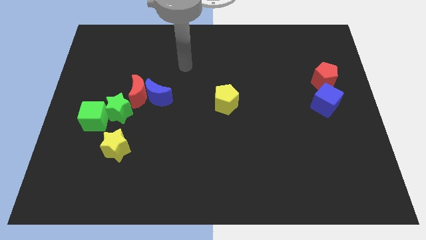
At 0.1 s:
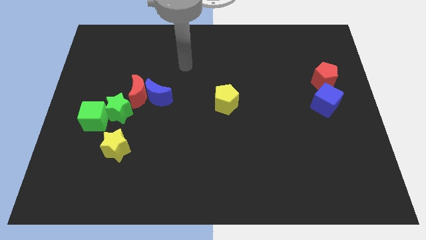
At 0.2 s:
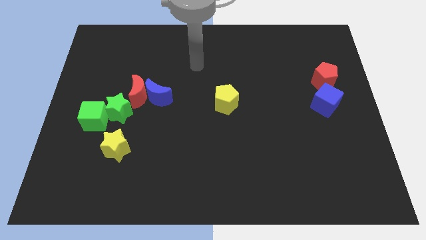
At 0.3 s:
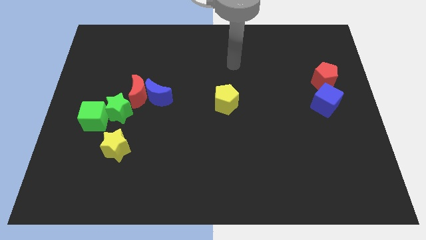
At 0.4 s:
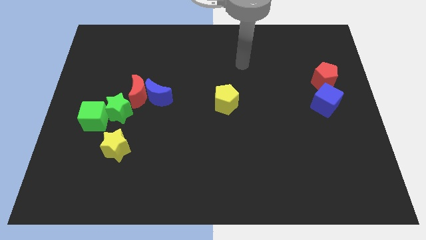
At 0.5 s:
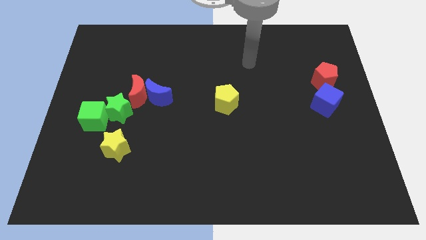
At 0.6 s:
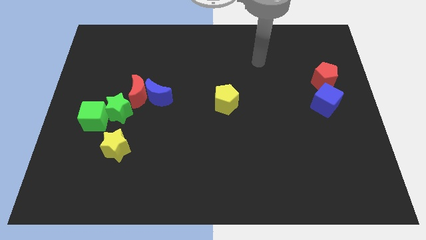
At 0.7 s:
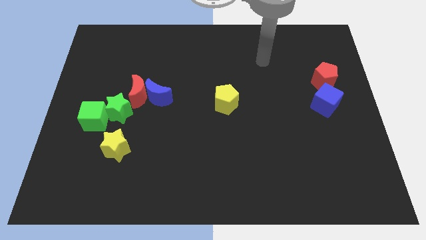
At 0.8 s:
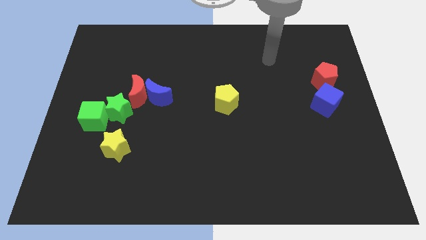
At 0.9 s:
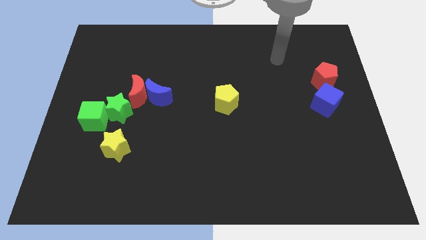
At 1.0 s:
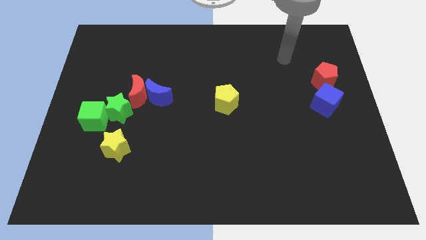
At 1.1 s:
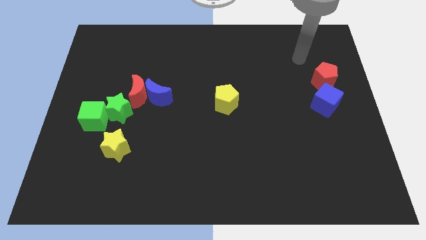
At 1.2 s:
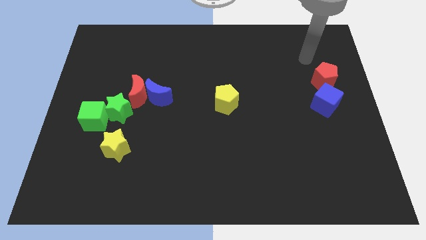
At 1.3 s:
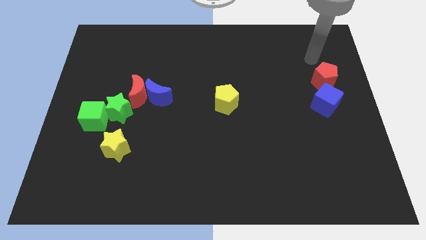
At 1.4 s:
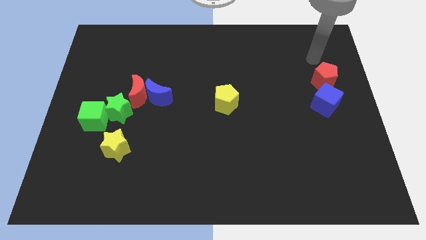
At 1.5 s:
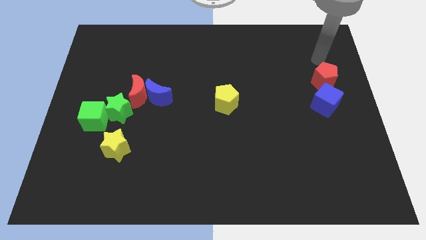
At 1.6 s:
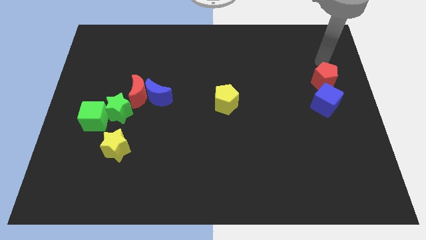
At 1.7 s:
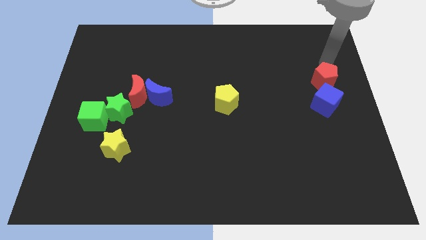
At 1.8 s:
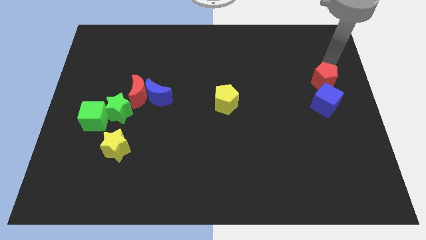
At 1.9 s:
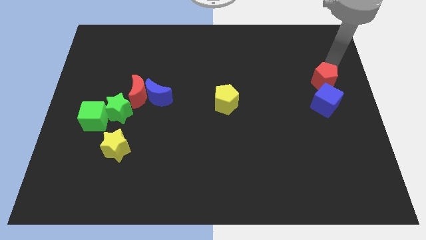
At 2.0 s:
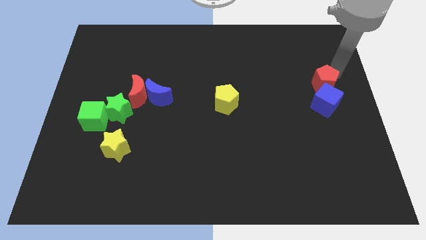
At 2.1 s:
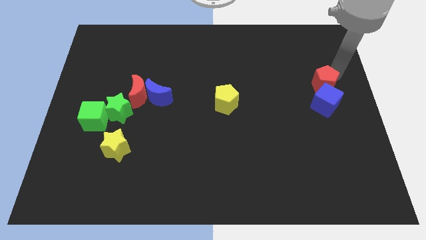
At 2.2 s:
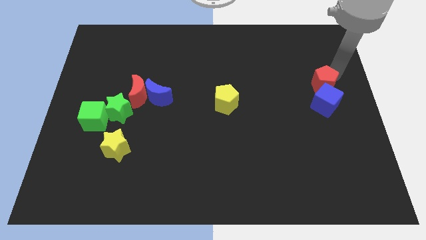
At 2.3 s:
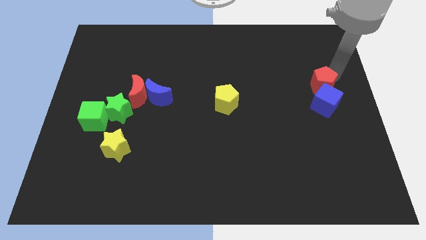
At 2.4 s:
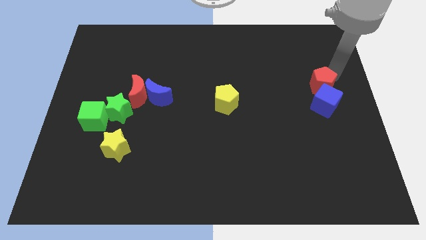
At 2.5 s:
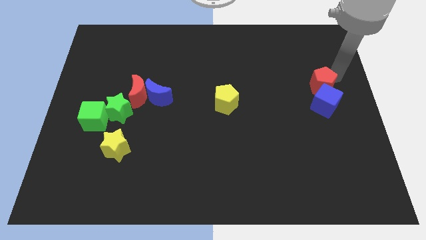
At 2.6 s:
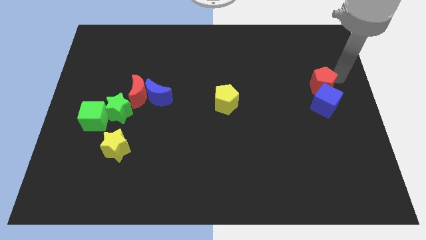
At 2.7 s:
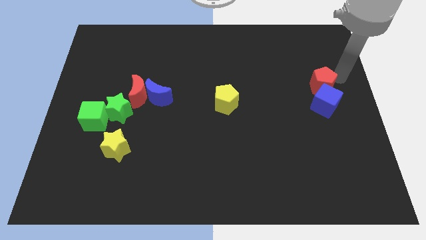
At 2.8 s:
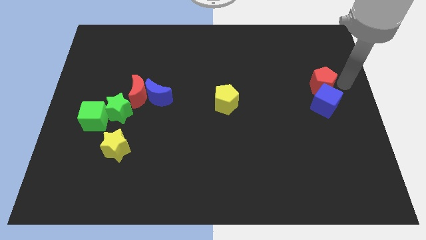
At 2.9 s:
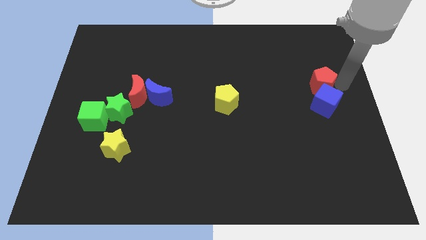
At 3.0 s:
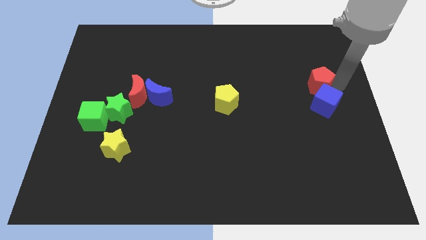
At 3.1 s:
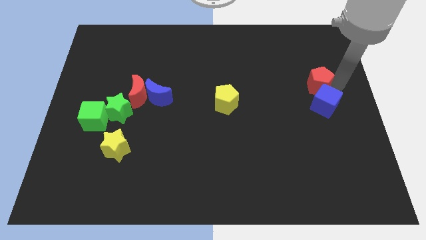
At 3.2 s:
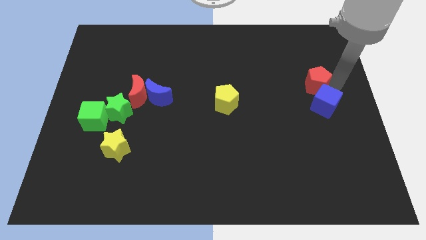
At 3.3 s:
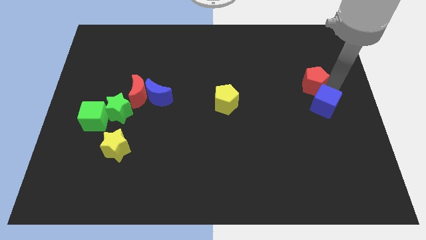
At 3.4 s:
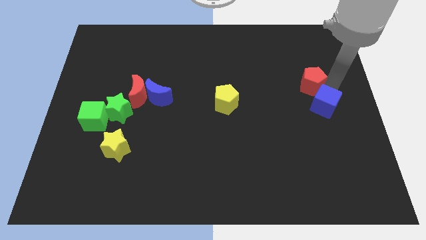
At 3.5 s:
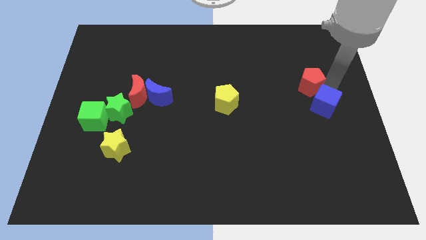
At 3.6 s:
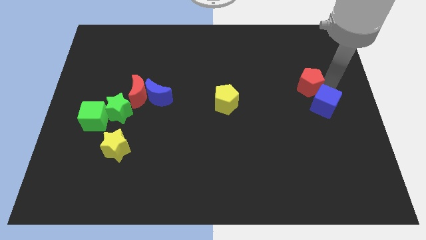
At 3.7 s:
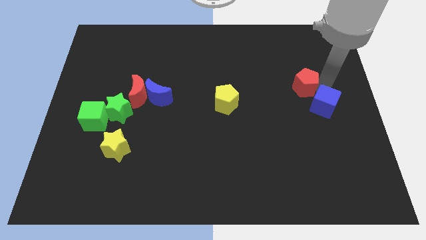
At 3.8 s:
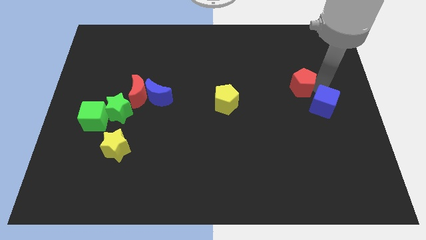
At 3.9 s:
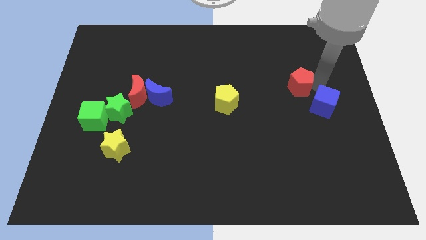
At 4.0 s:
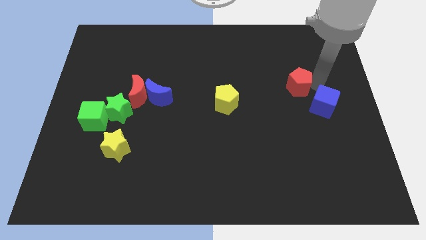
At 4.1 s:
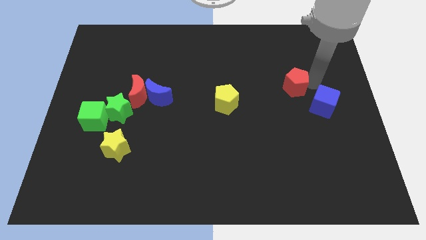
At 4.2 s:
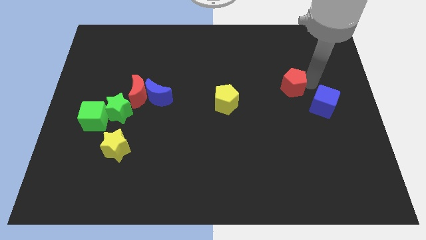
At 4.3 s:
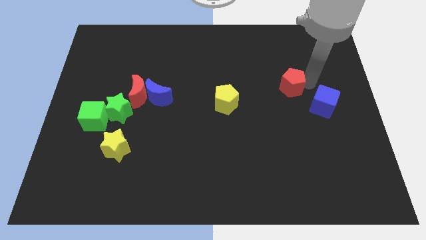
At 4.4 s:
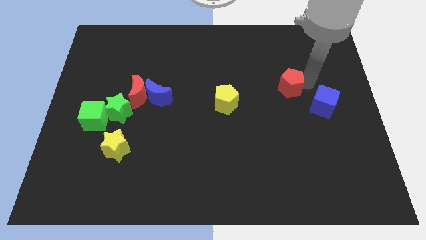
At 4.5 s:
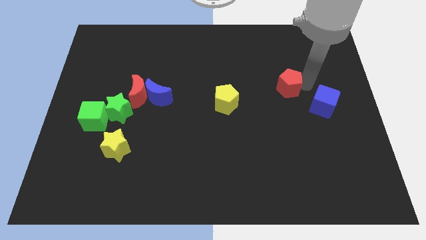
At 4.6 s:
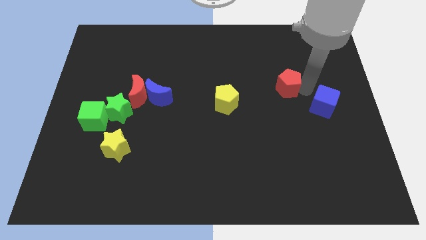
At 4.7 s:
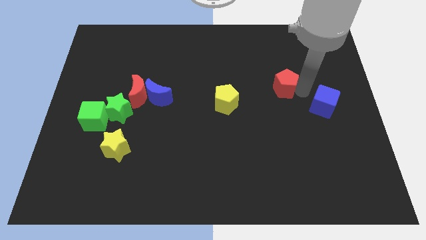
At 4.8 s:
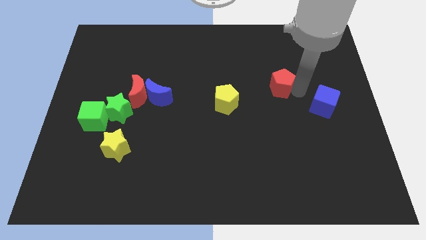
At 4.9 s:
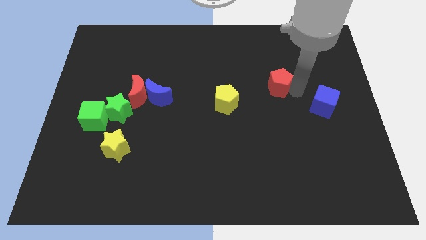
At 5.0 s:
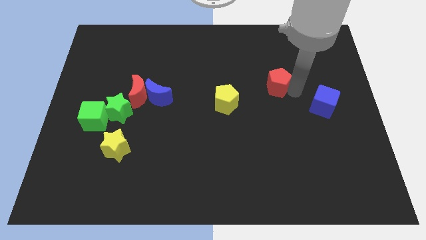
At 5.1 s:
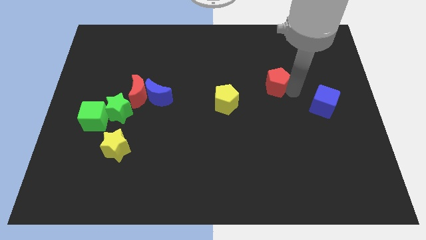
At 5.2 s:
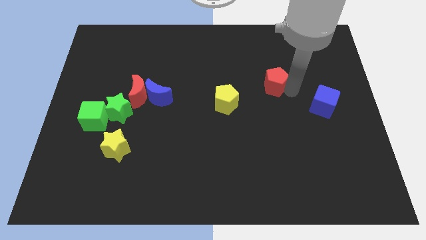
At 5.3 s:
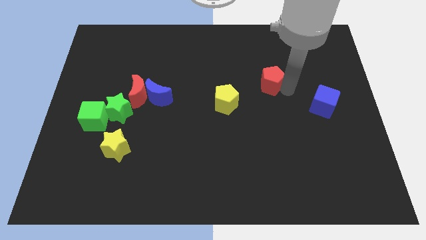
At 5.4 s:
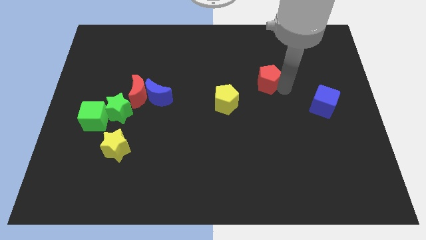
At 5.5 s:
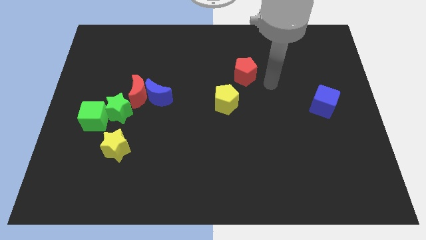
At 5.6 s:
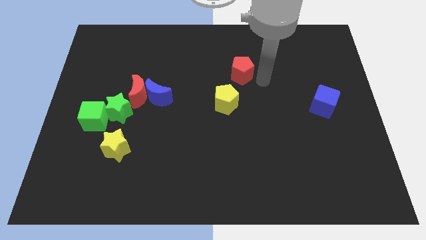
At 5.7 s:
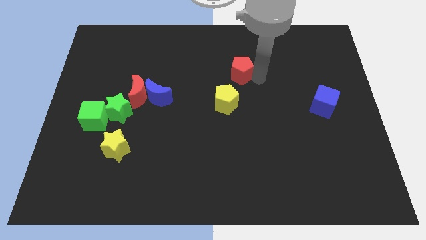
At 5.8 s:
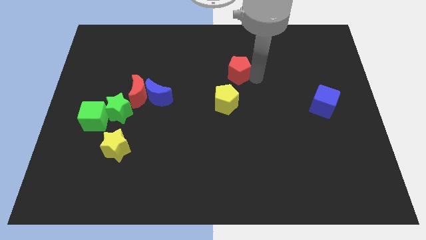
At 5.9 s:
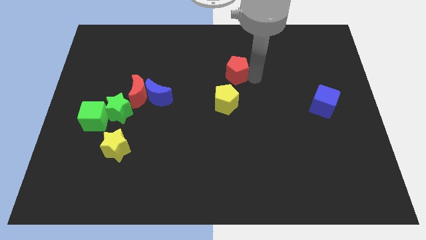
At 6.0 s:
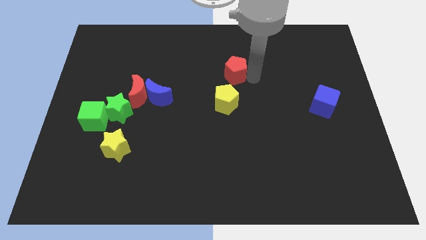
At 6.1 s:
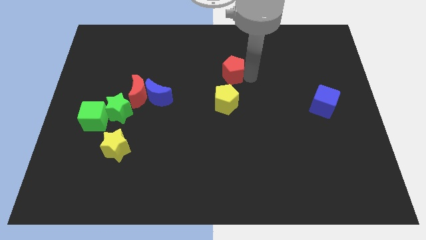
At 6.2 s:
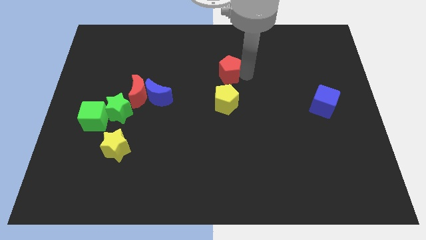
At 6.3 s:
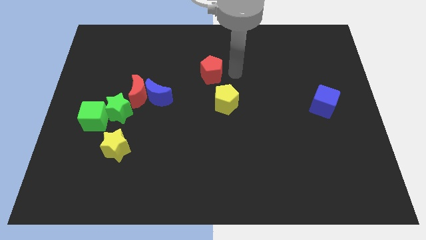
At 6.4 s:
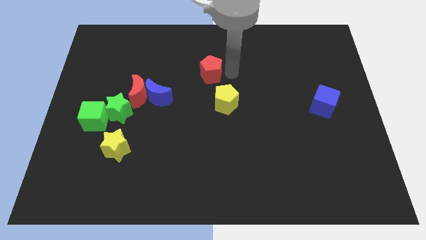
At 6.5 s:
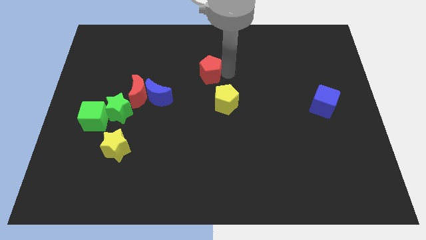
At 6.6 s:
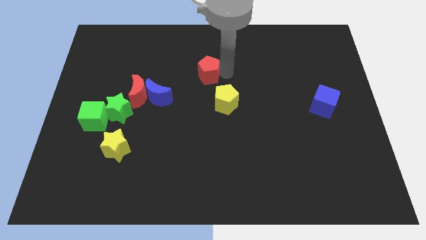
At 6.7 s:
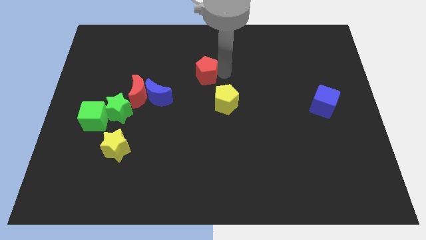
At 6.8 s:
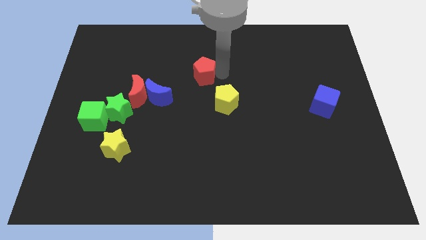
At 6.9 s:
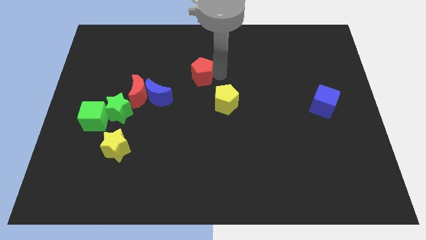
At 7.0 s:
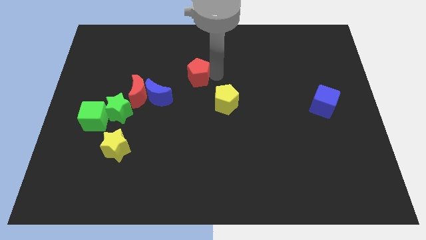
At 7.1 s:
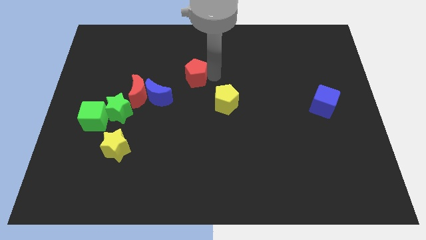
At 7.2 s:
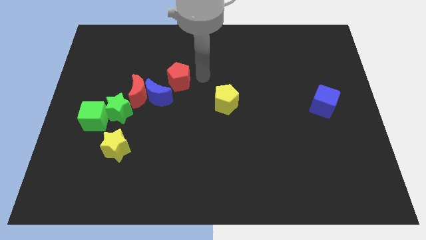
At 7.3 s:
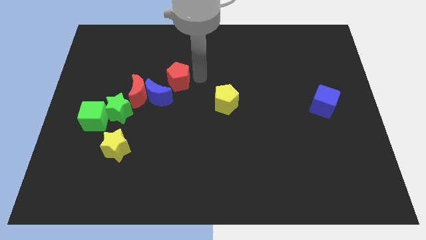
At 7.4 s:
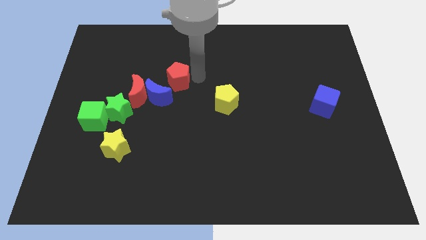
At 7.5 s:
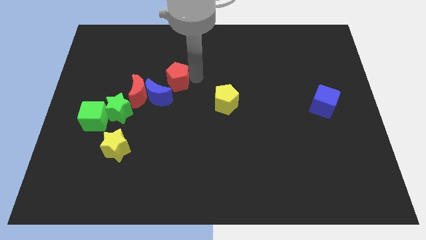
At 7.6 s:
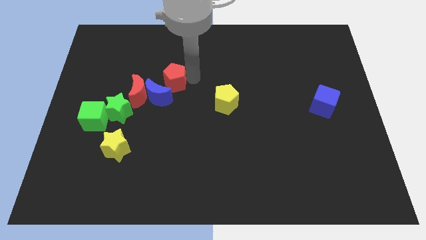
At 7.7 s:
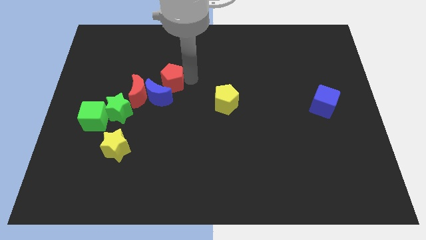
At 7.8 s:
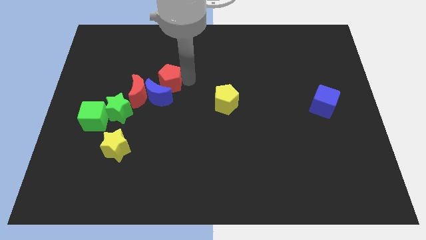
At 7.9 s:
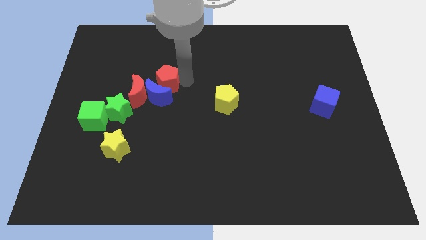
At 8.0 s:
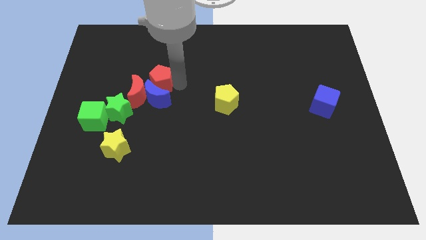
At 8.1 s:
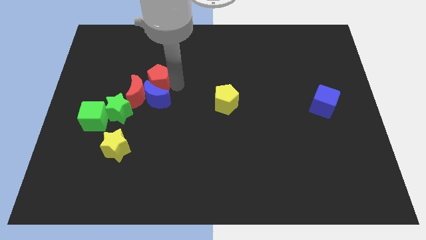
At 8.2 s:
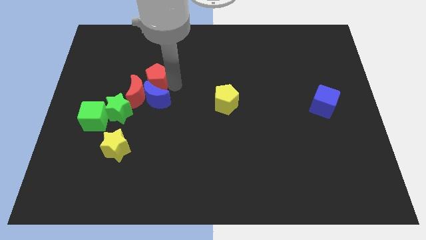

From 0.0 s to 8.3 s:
put the red pentagon to the red moon

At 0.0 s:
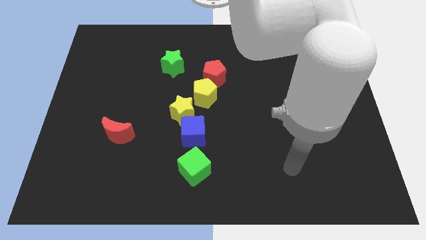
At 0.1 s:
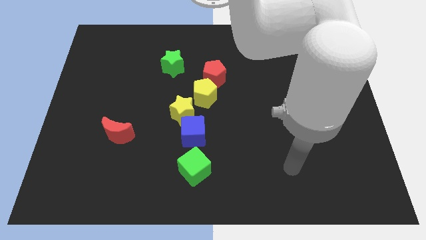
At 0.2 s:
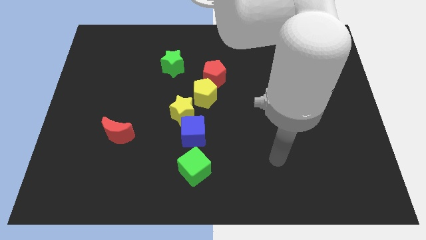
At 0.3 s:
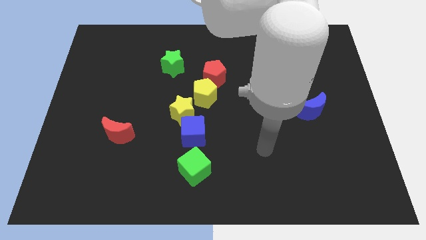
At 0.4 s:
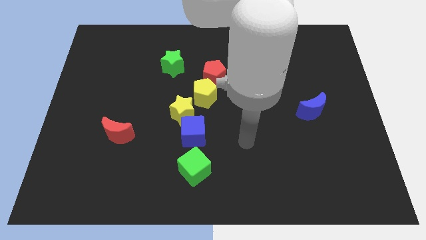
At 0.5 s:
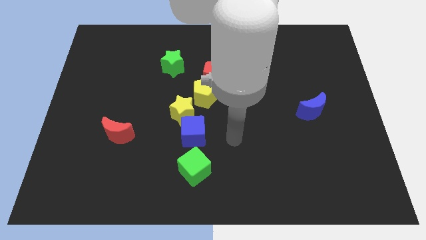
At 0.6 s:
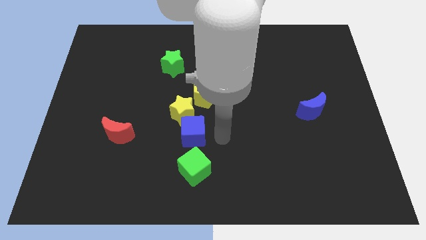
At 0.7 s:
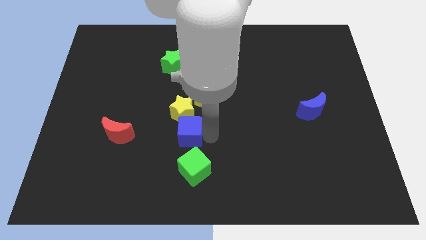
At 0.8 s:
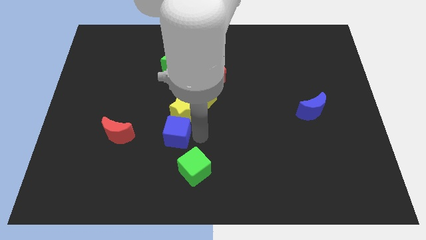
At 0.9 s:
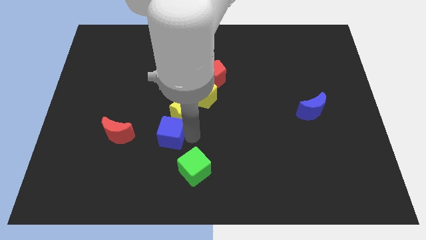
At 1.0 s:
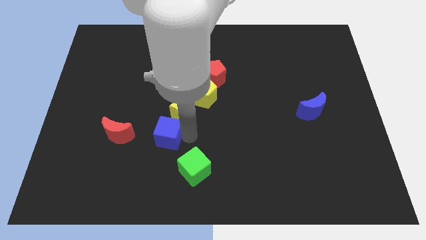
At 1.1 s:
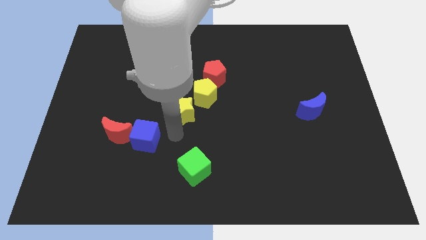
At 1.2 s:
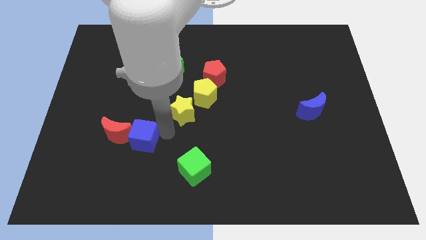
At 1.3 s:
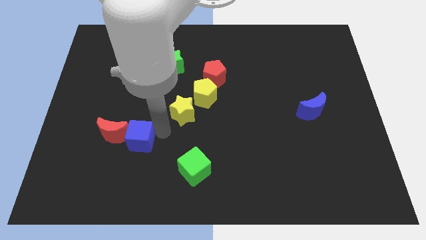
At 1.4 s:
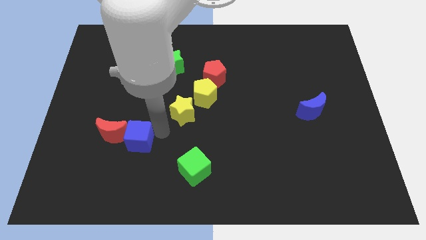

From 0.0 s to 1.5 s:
put the blue cube close to the red moon
